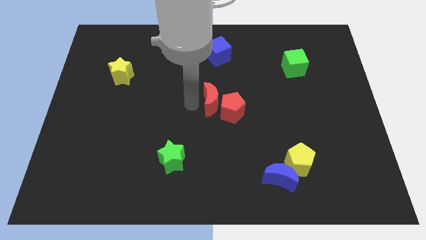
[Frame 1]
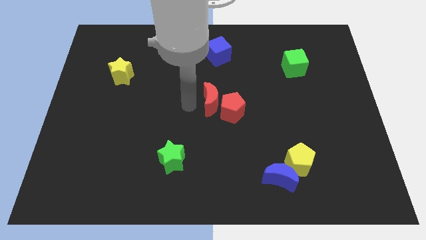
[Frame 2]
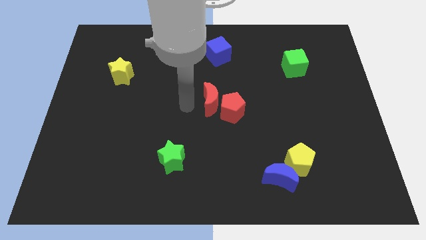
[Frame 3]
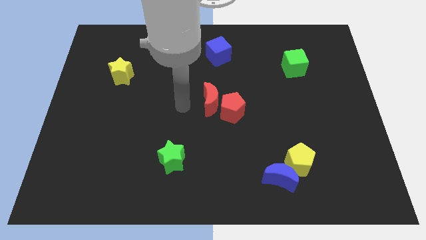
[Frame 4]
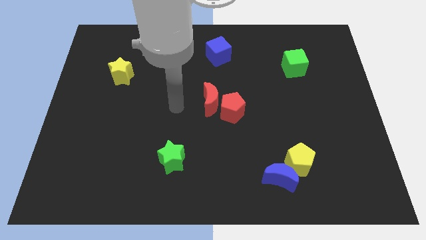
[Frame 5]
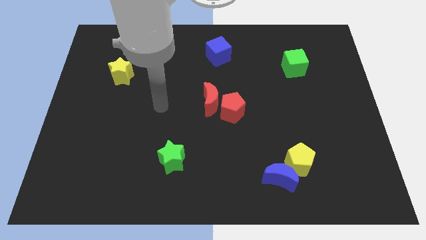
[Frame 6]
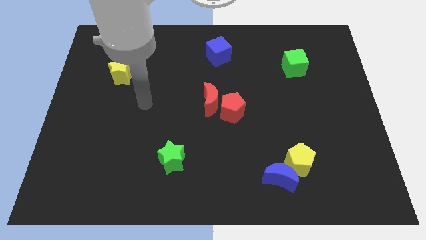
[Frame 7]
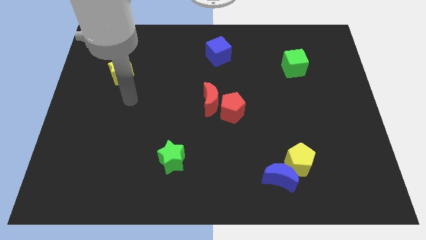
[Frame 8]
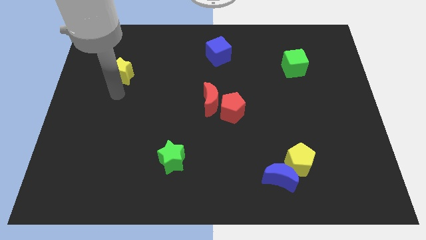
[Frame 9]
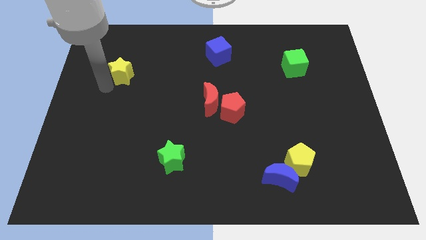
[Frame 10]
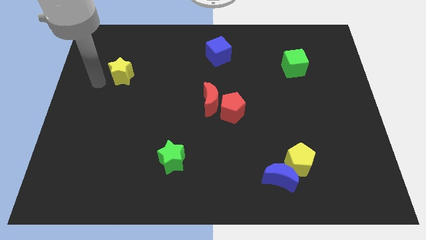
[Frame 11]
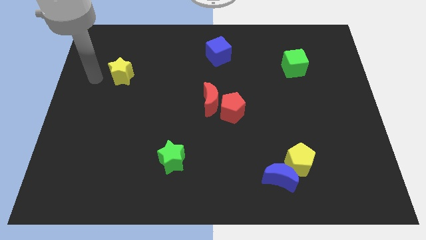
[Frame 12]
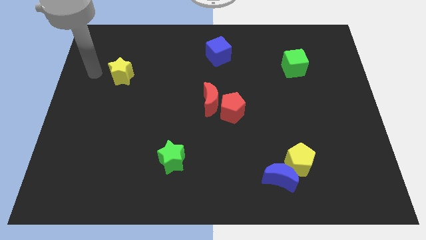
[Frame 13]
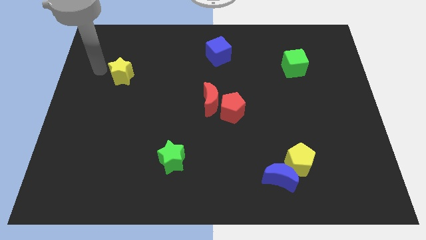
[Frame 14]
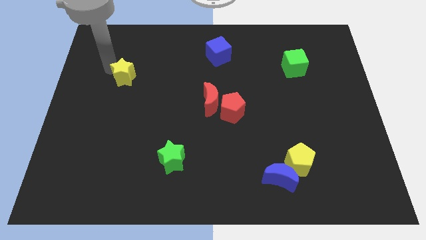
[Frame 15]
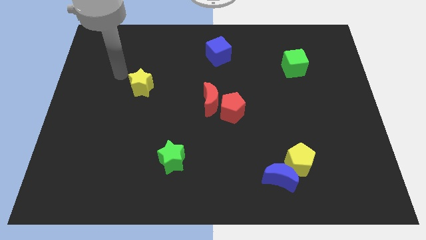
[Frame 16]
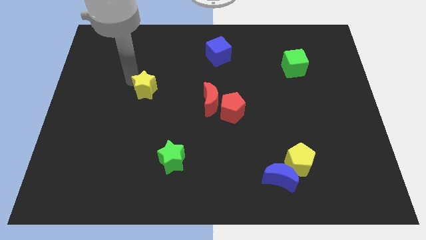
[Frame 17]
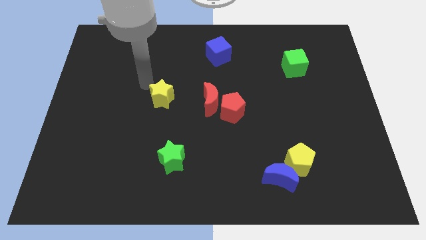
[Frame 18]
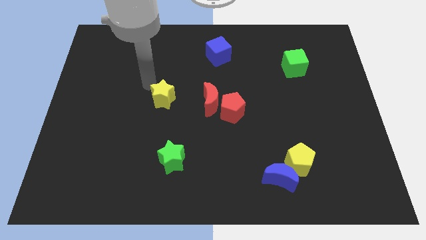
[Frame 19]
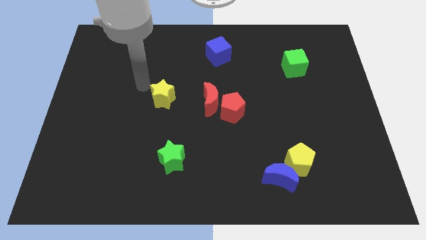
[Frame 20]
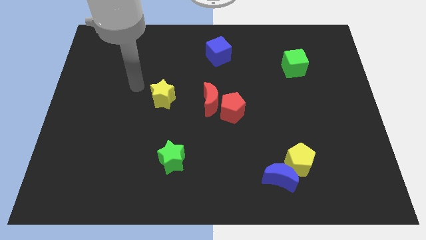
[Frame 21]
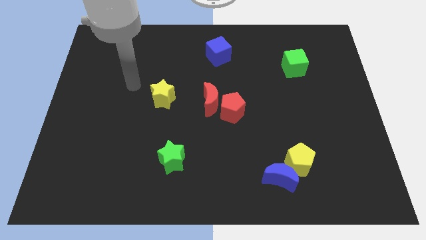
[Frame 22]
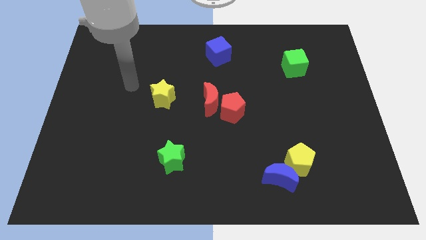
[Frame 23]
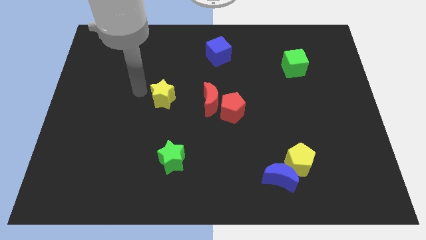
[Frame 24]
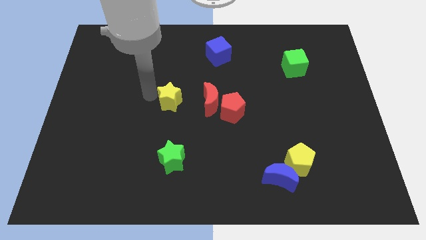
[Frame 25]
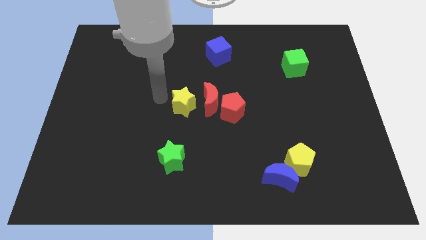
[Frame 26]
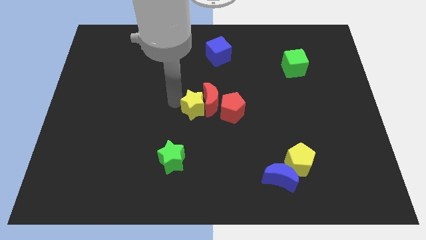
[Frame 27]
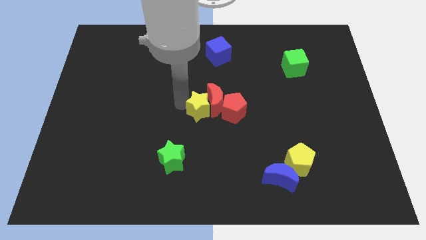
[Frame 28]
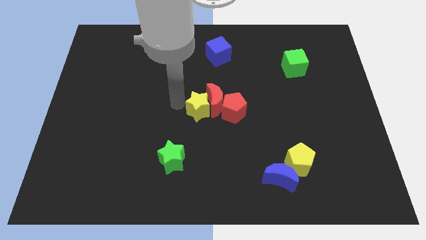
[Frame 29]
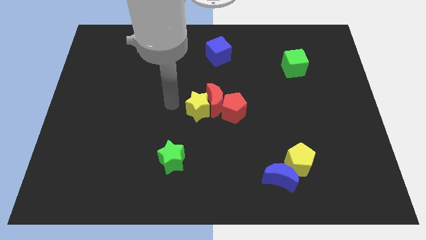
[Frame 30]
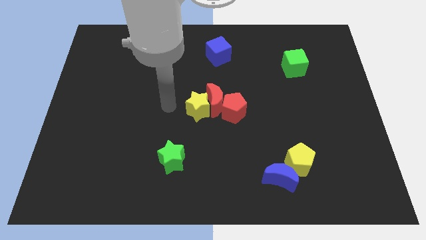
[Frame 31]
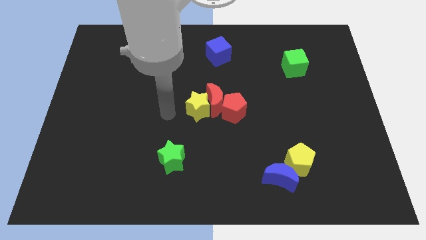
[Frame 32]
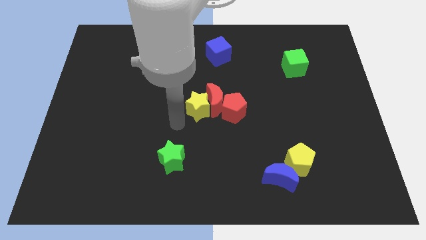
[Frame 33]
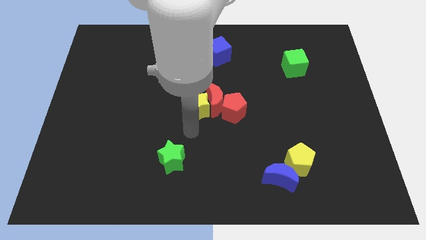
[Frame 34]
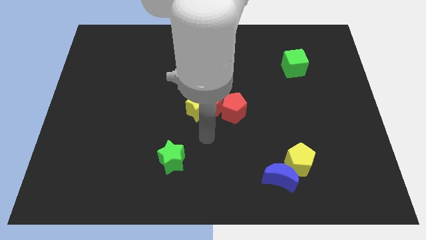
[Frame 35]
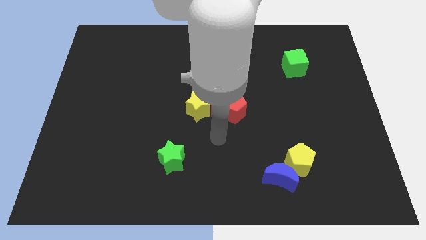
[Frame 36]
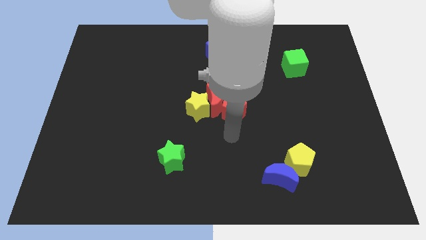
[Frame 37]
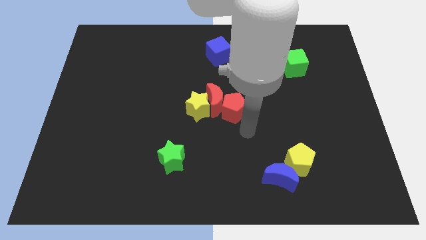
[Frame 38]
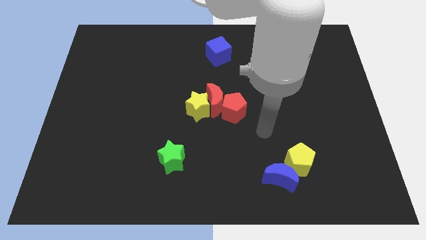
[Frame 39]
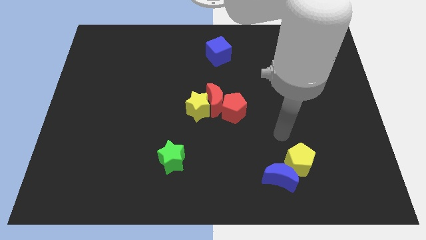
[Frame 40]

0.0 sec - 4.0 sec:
push yellow star into red moon

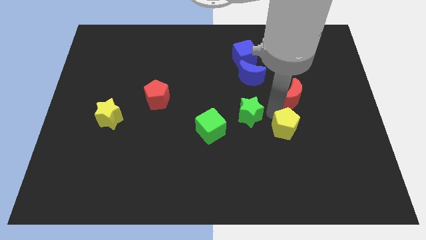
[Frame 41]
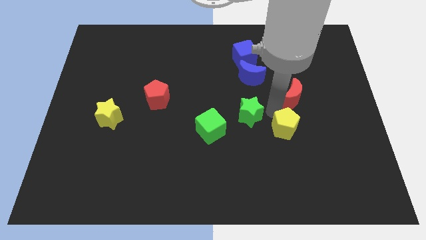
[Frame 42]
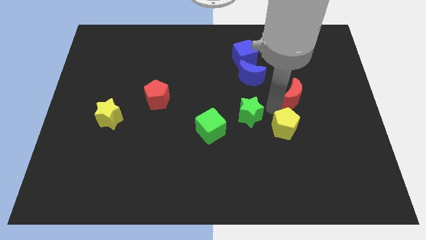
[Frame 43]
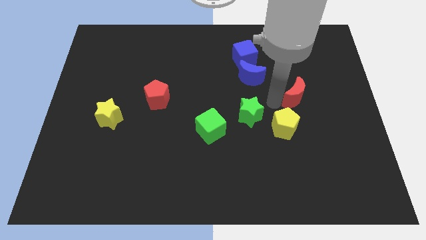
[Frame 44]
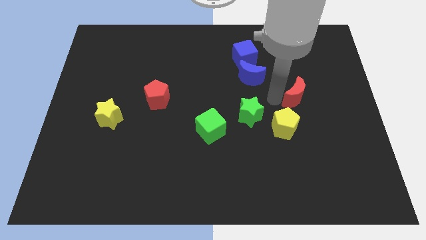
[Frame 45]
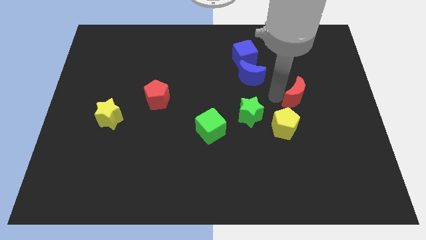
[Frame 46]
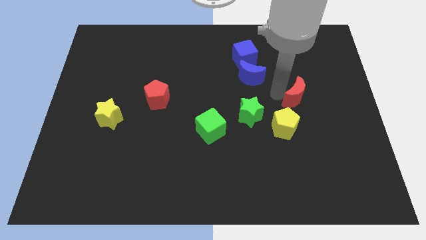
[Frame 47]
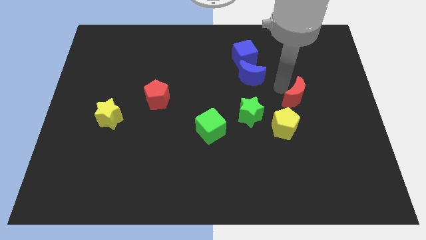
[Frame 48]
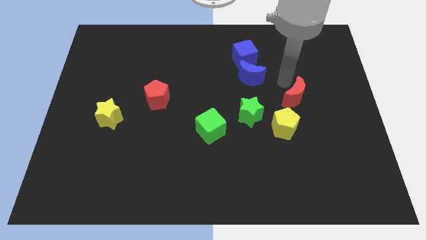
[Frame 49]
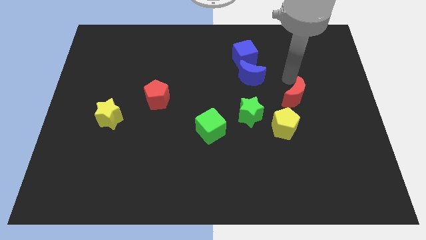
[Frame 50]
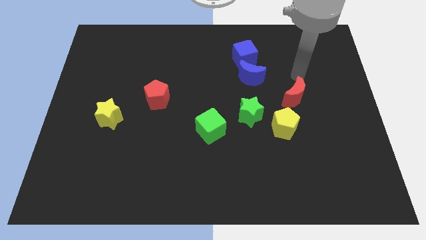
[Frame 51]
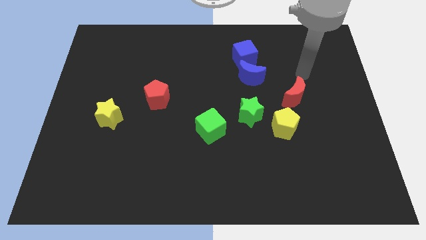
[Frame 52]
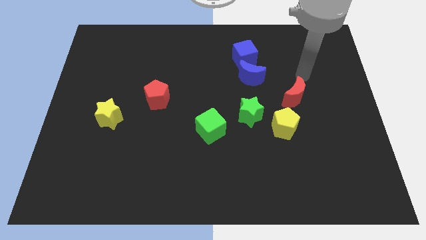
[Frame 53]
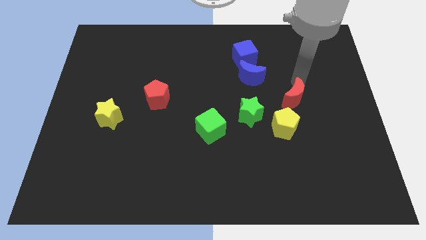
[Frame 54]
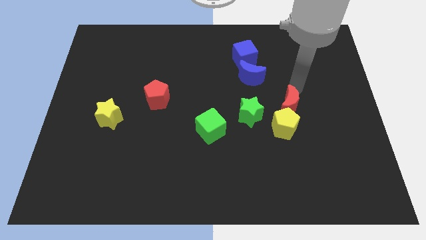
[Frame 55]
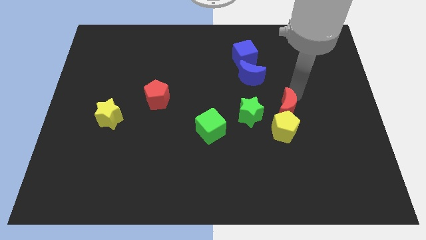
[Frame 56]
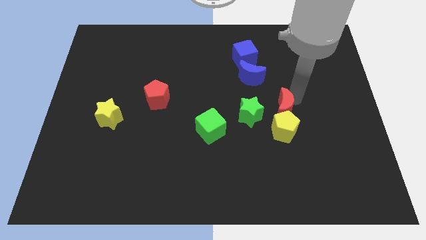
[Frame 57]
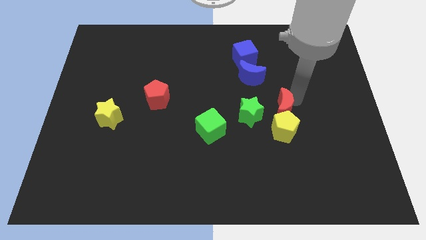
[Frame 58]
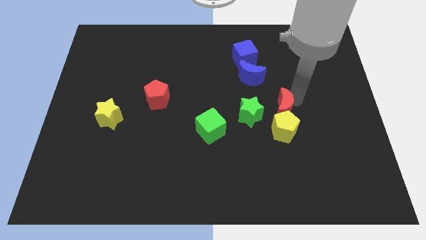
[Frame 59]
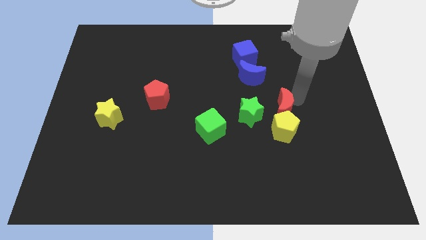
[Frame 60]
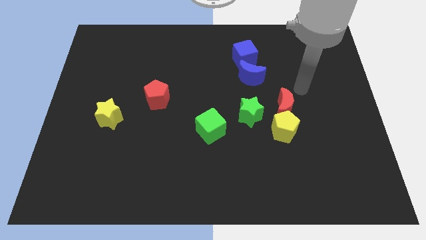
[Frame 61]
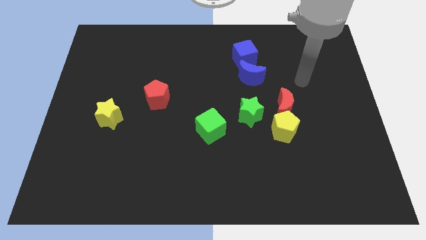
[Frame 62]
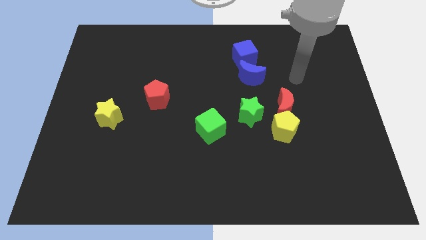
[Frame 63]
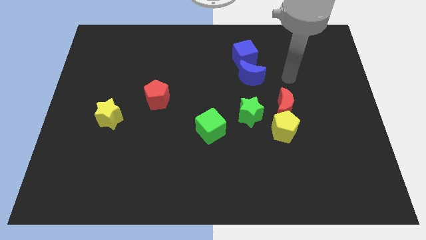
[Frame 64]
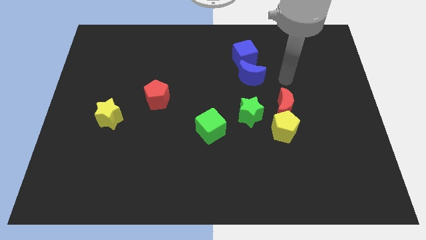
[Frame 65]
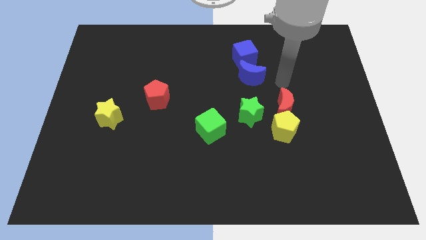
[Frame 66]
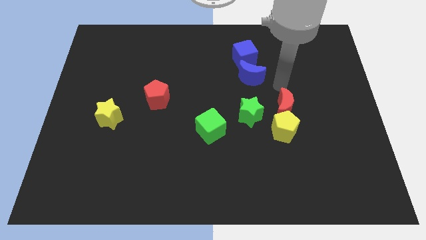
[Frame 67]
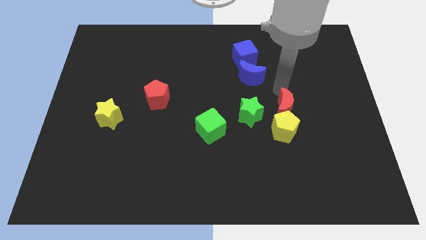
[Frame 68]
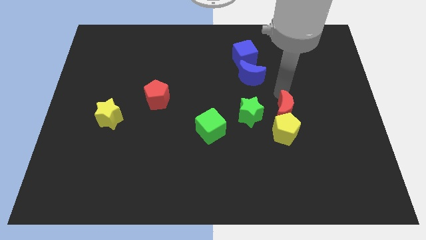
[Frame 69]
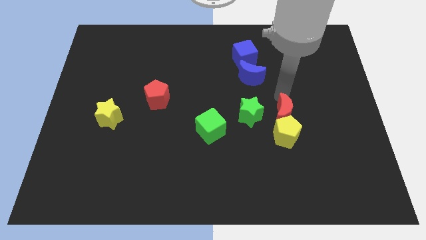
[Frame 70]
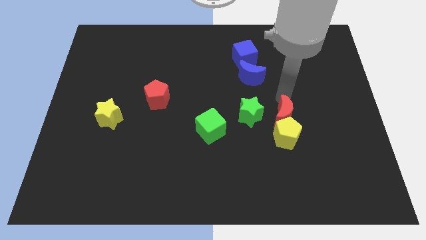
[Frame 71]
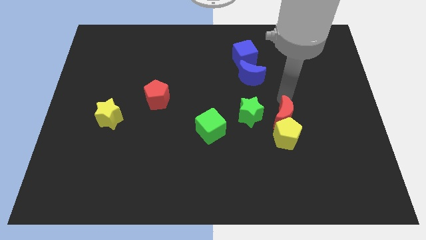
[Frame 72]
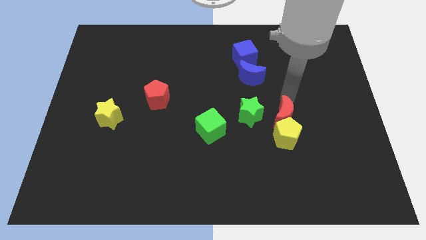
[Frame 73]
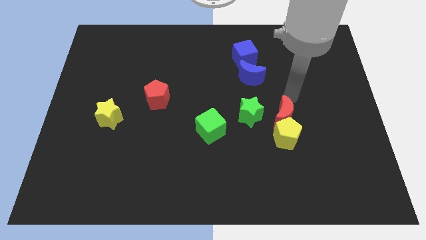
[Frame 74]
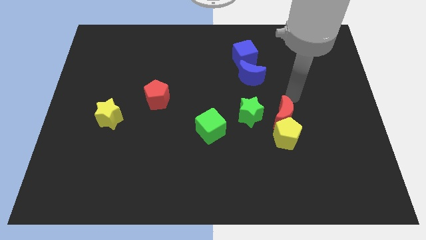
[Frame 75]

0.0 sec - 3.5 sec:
put the red moon at the right side of the green star

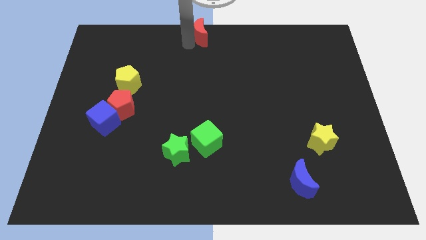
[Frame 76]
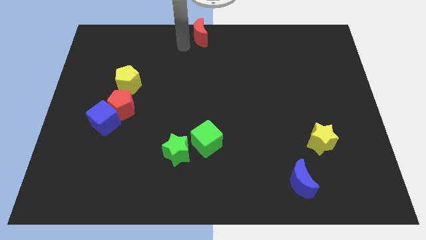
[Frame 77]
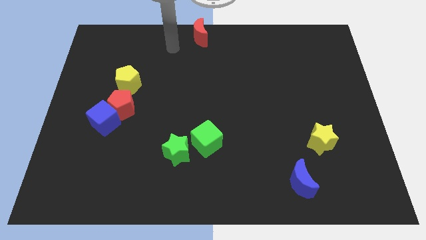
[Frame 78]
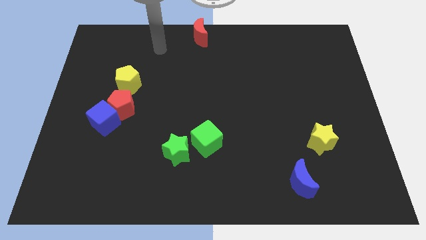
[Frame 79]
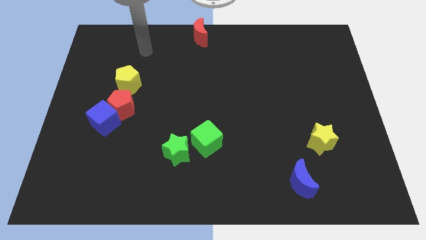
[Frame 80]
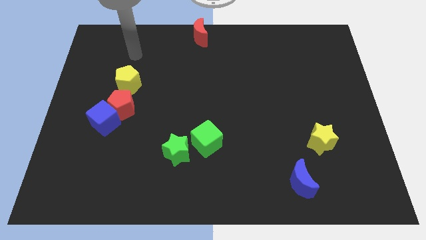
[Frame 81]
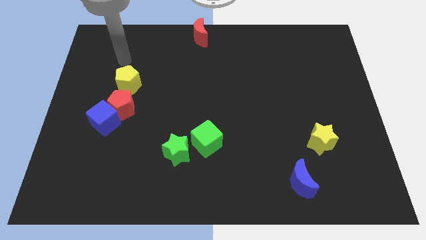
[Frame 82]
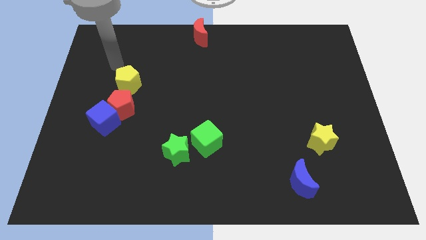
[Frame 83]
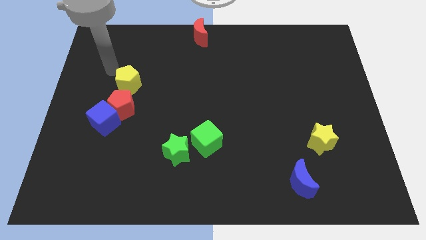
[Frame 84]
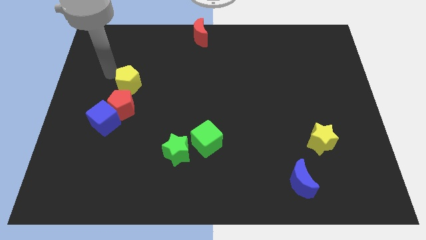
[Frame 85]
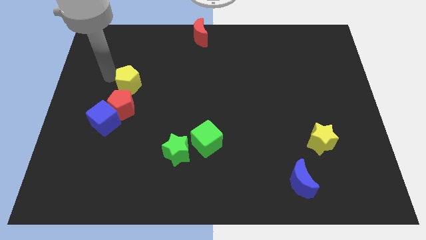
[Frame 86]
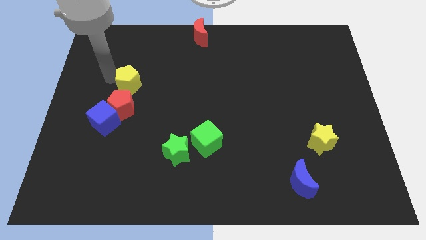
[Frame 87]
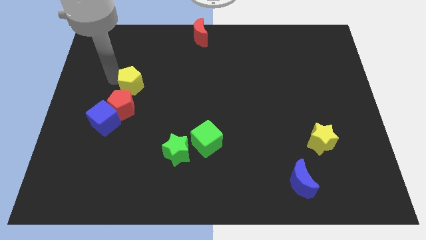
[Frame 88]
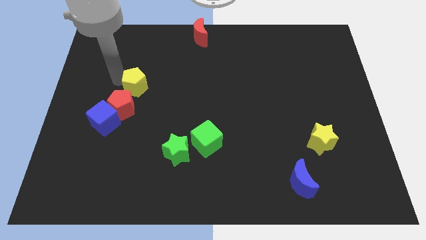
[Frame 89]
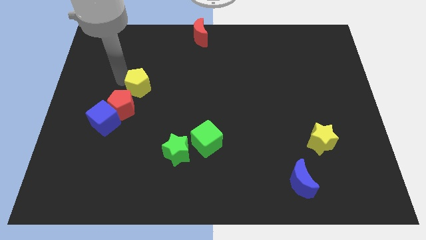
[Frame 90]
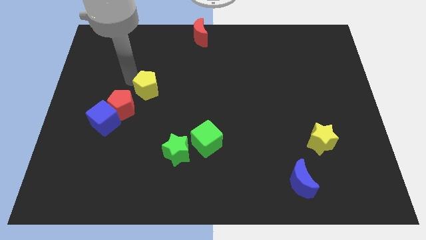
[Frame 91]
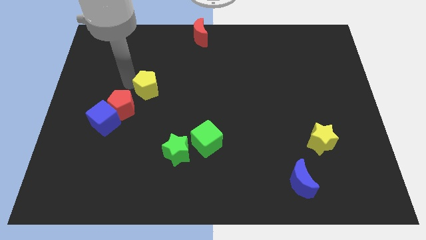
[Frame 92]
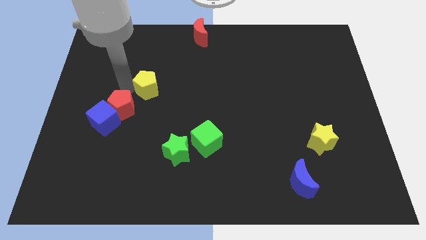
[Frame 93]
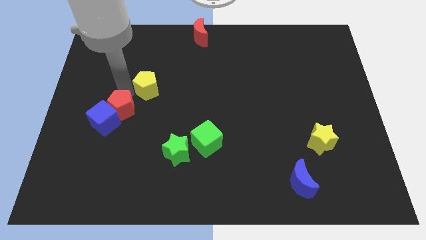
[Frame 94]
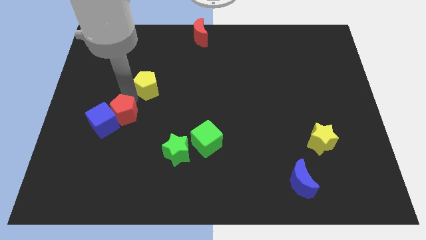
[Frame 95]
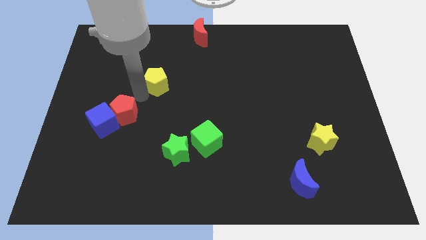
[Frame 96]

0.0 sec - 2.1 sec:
move yellow pentagon slightly to right side
